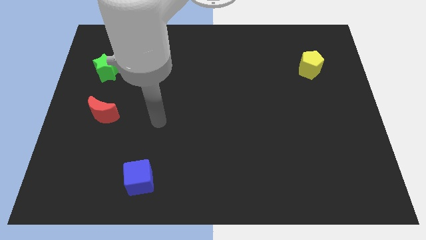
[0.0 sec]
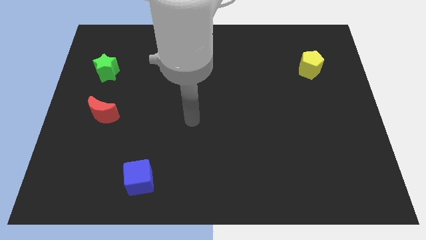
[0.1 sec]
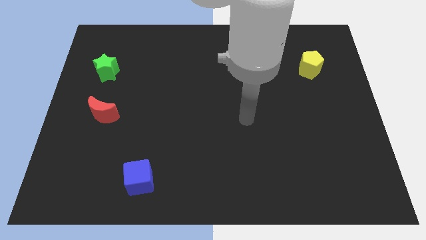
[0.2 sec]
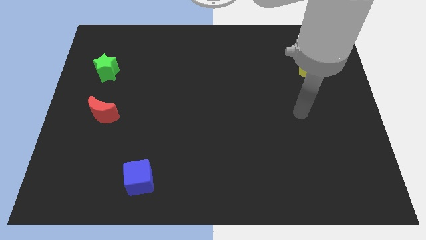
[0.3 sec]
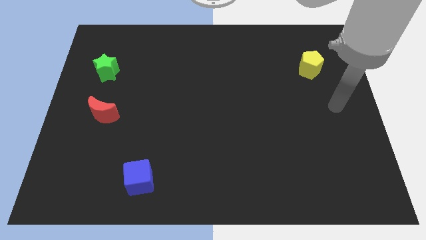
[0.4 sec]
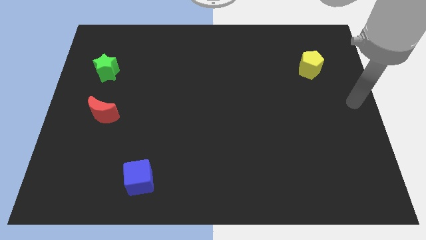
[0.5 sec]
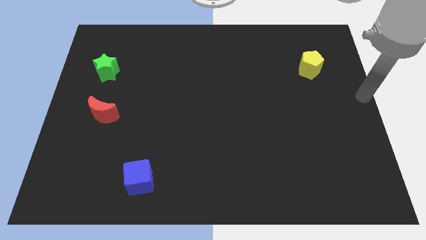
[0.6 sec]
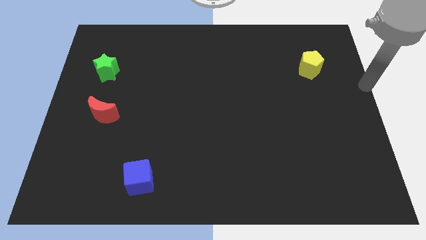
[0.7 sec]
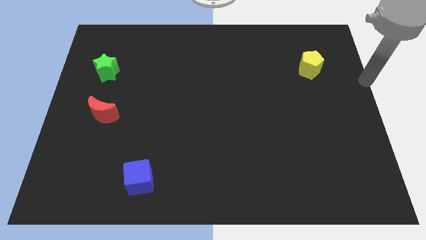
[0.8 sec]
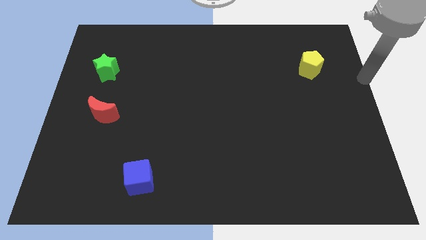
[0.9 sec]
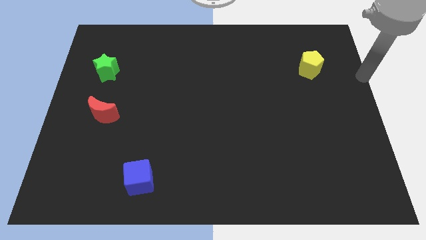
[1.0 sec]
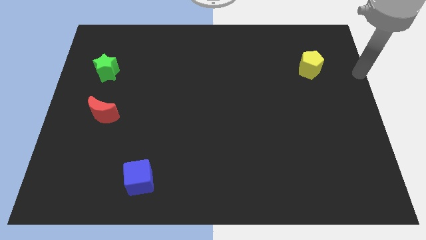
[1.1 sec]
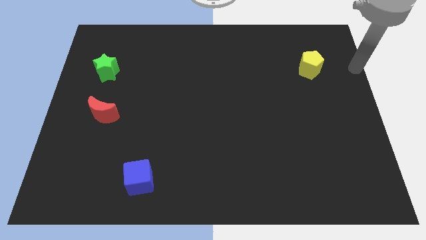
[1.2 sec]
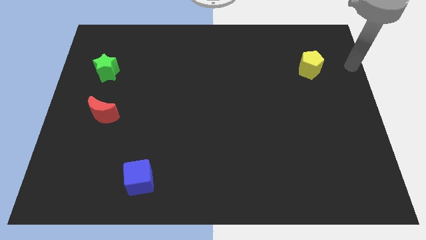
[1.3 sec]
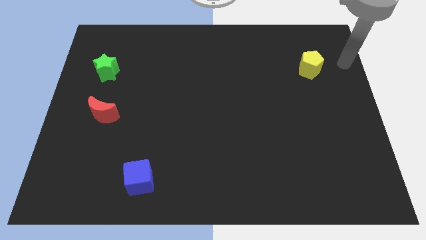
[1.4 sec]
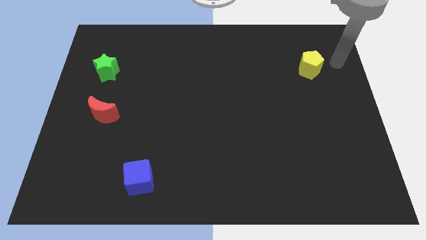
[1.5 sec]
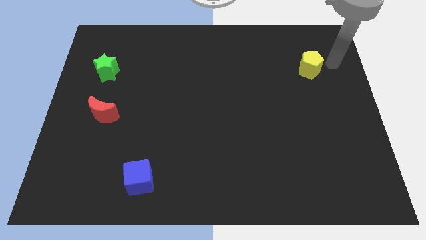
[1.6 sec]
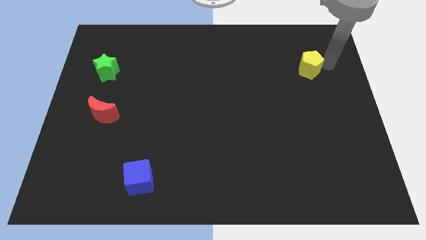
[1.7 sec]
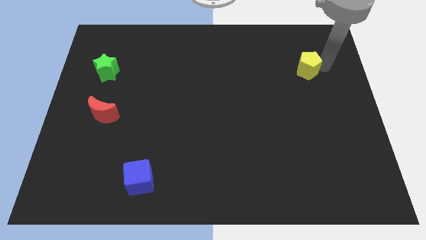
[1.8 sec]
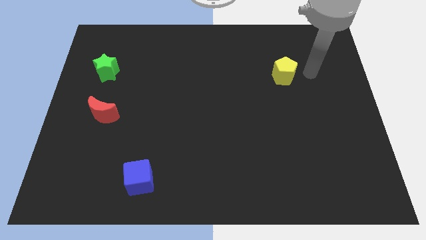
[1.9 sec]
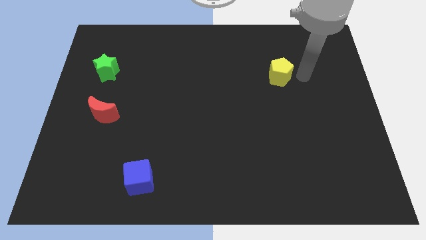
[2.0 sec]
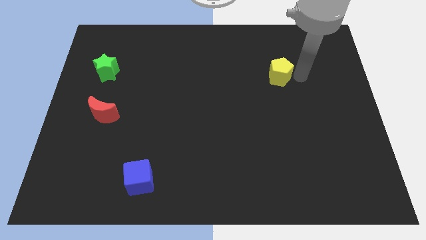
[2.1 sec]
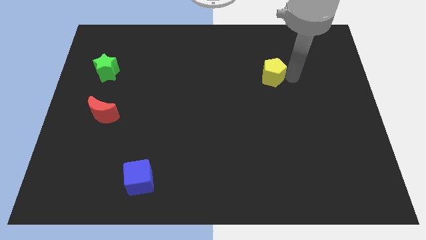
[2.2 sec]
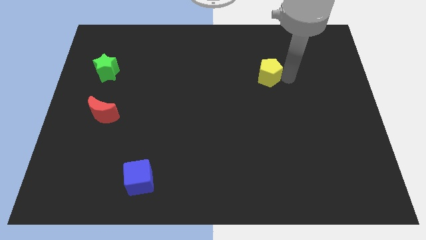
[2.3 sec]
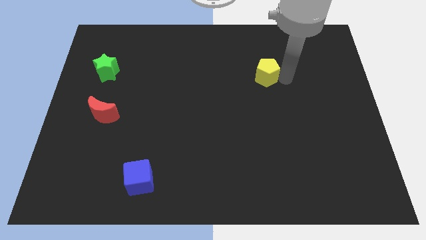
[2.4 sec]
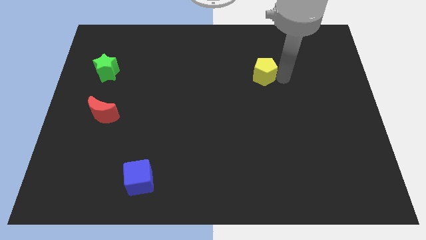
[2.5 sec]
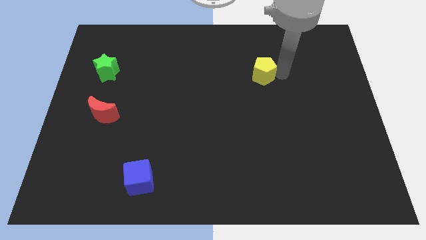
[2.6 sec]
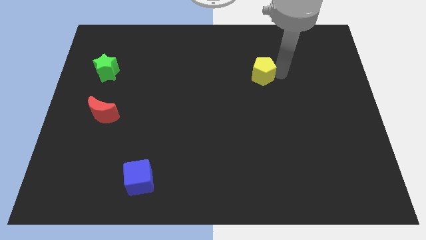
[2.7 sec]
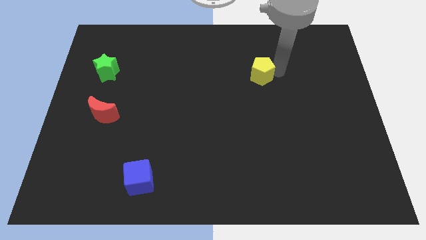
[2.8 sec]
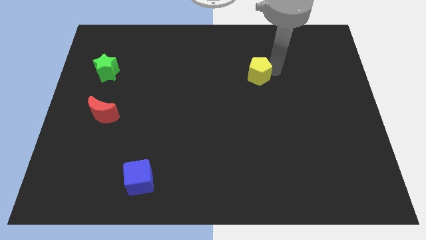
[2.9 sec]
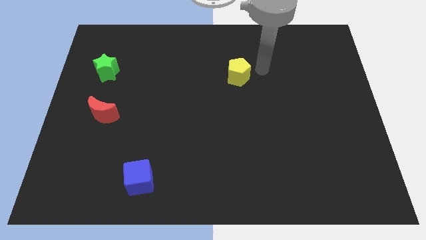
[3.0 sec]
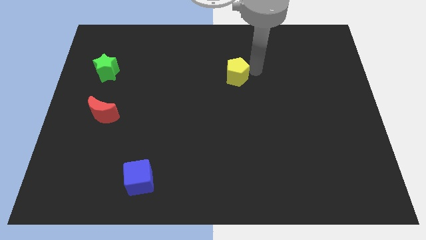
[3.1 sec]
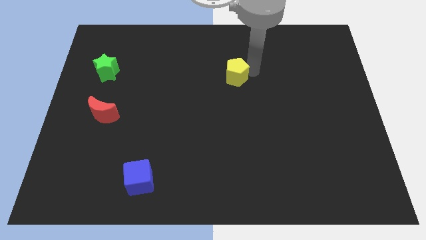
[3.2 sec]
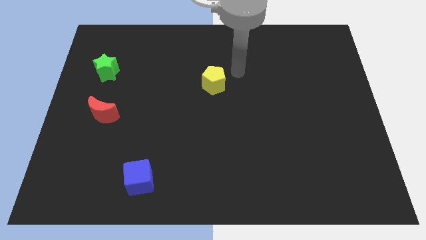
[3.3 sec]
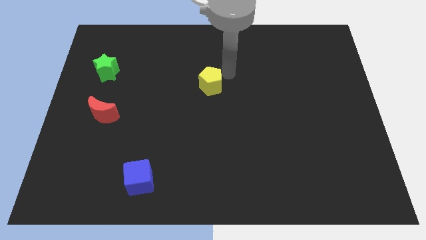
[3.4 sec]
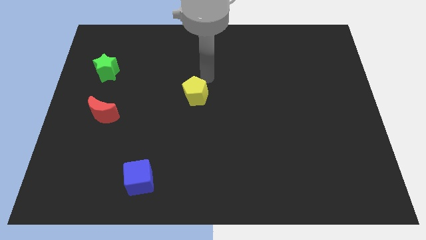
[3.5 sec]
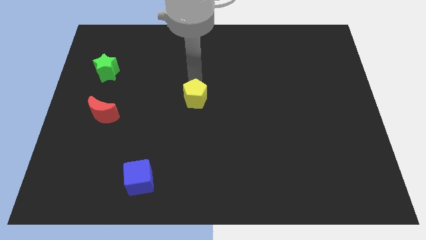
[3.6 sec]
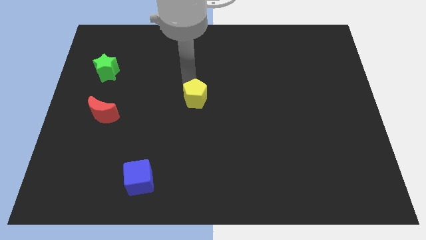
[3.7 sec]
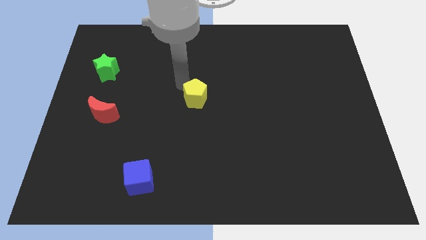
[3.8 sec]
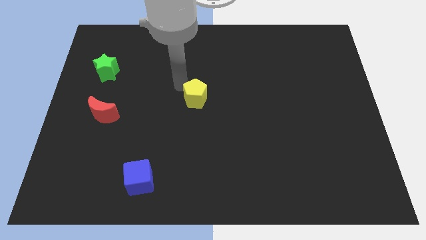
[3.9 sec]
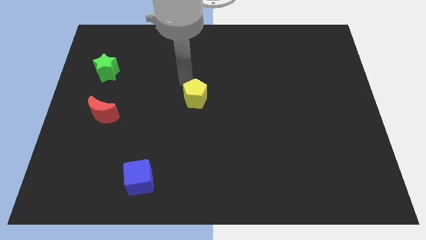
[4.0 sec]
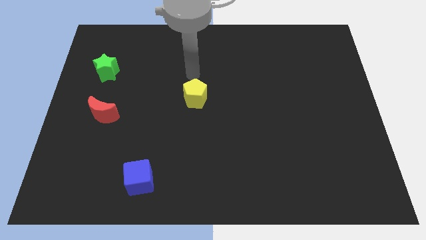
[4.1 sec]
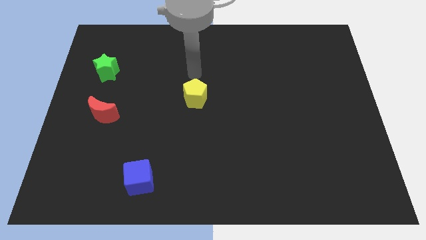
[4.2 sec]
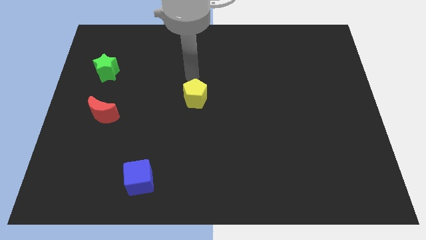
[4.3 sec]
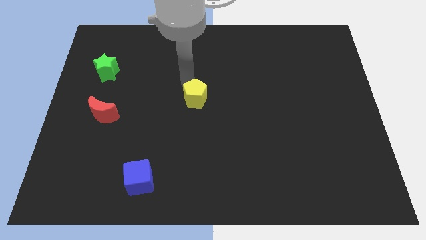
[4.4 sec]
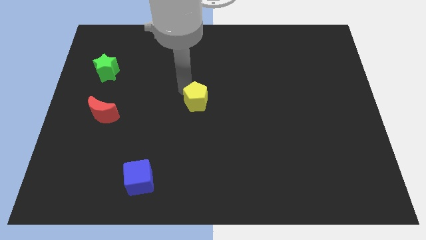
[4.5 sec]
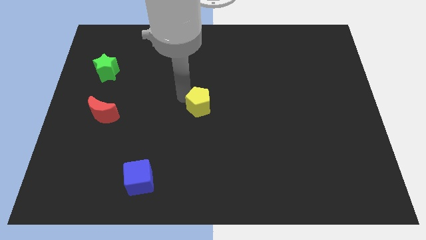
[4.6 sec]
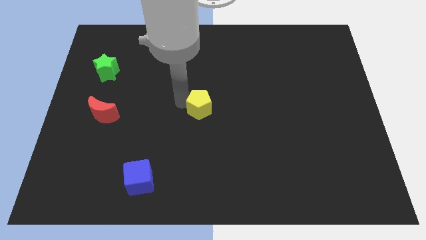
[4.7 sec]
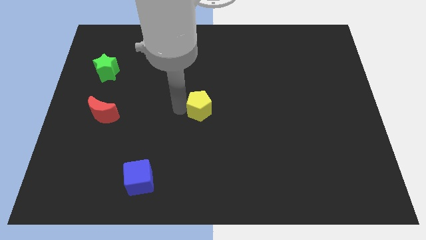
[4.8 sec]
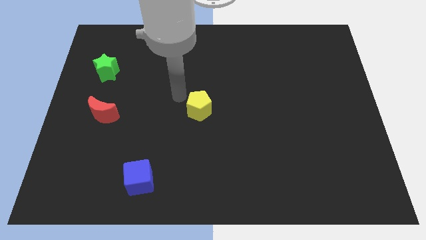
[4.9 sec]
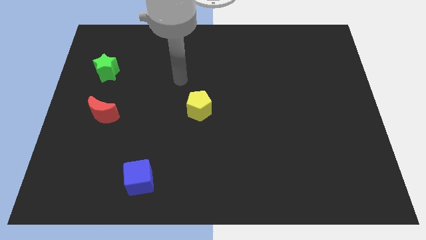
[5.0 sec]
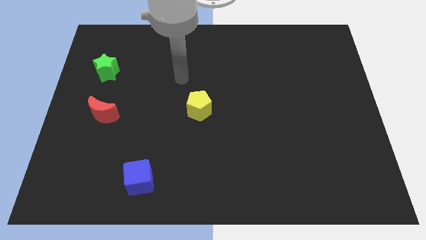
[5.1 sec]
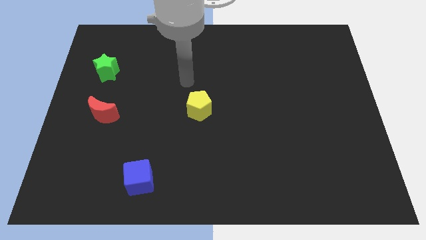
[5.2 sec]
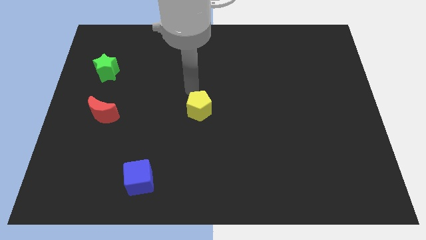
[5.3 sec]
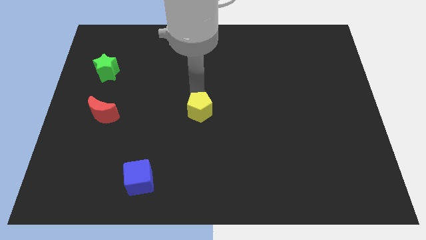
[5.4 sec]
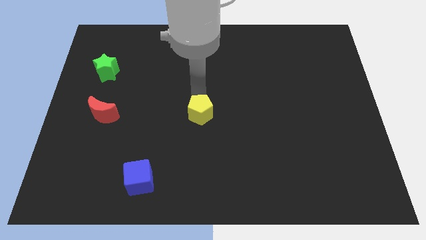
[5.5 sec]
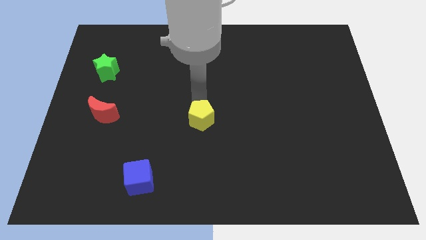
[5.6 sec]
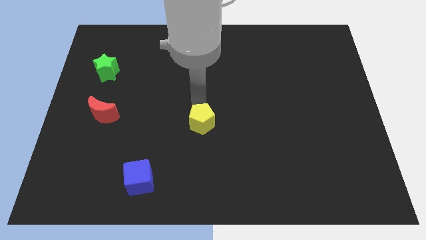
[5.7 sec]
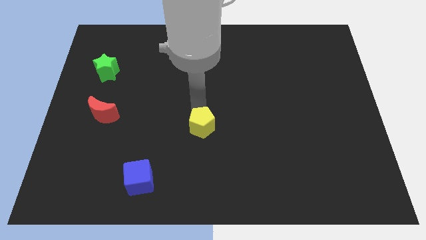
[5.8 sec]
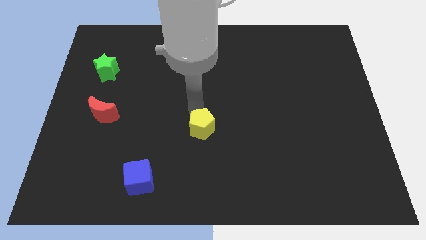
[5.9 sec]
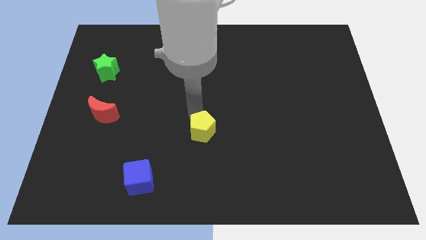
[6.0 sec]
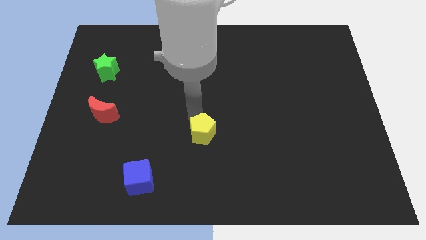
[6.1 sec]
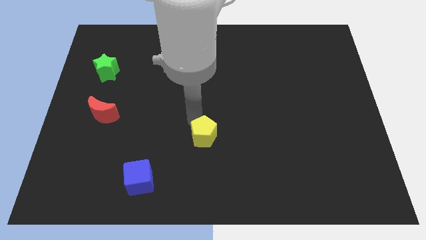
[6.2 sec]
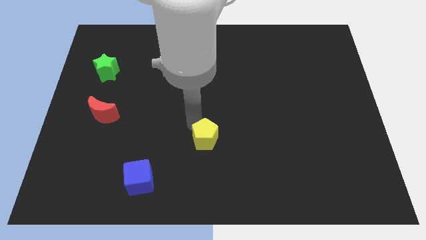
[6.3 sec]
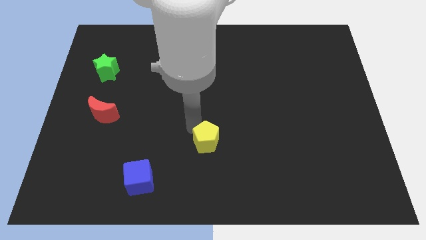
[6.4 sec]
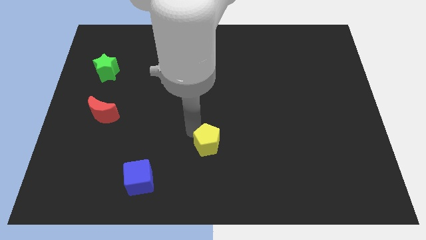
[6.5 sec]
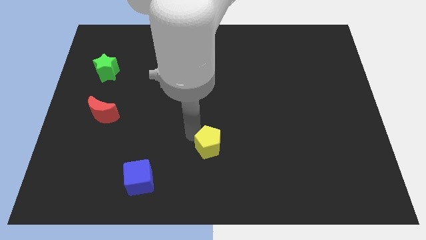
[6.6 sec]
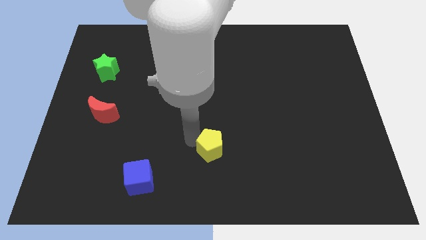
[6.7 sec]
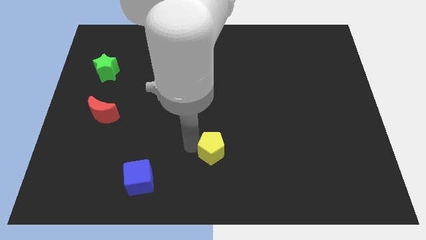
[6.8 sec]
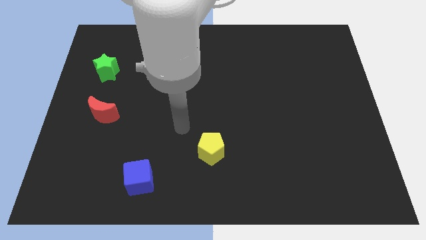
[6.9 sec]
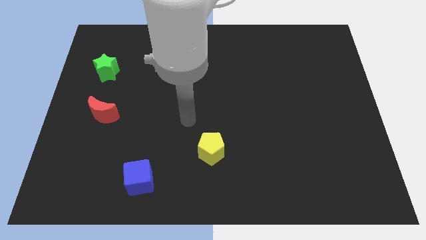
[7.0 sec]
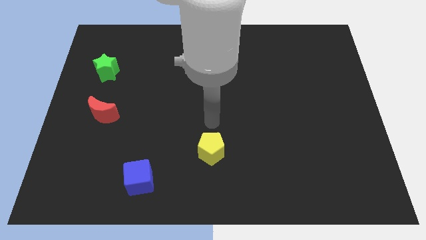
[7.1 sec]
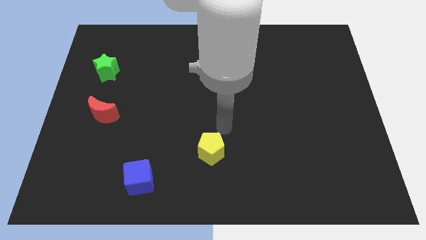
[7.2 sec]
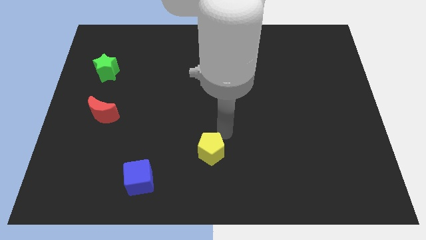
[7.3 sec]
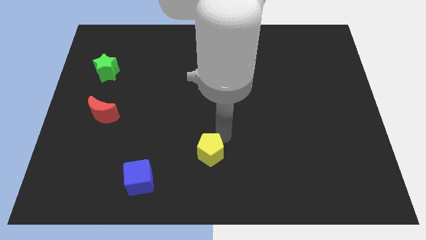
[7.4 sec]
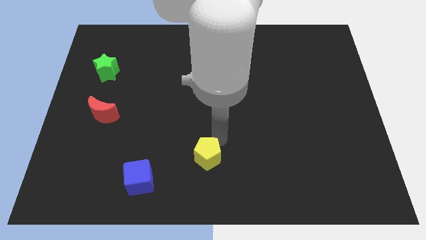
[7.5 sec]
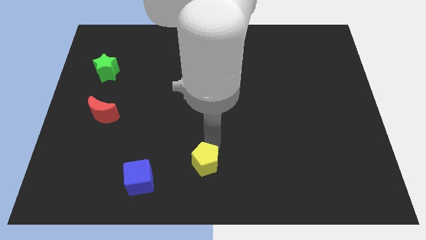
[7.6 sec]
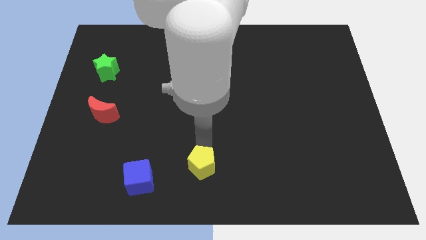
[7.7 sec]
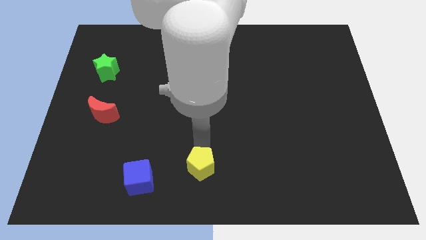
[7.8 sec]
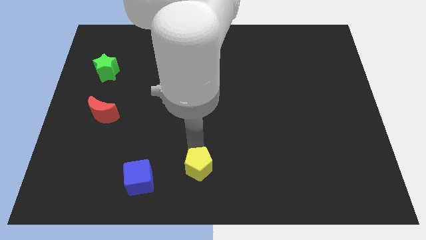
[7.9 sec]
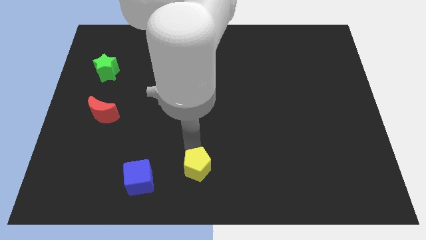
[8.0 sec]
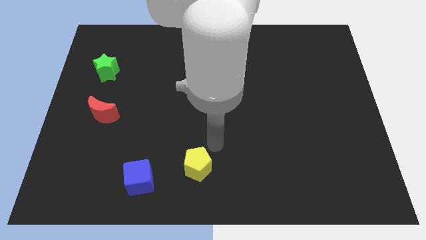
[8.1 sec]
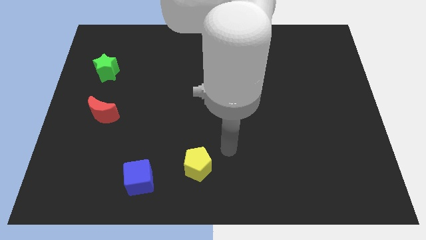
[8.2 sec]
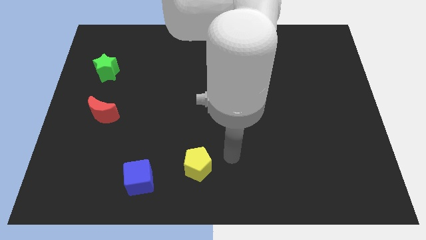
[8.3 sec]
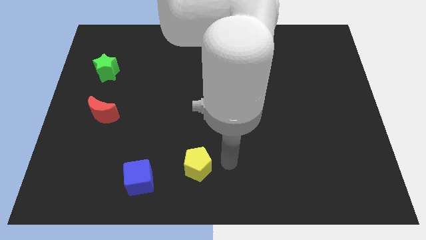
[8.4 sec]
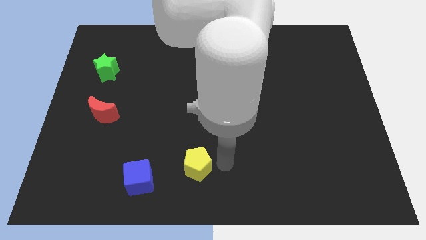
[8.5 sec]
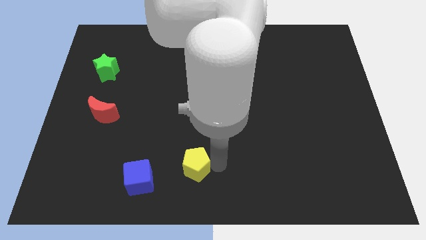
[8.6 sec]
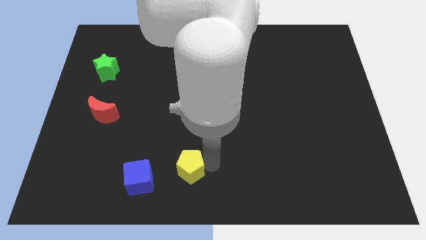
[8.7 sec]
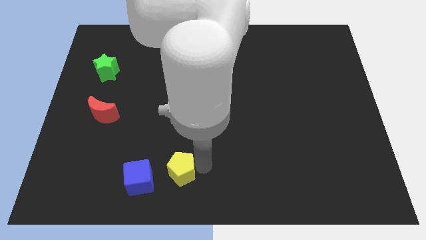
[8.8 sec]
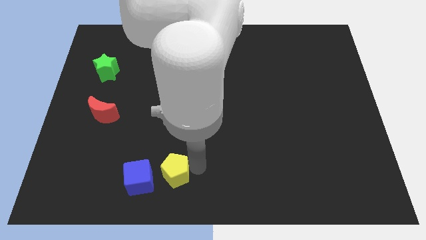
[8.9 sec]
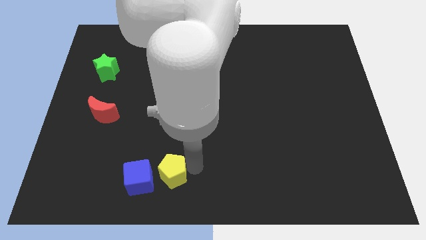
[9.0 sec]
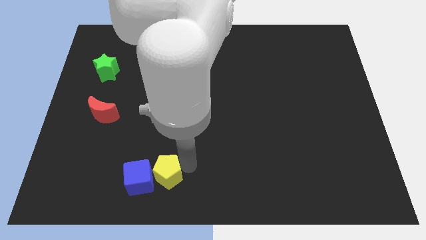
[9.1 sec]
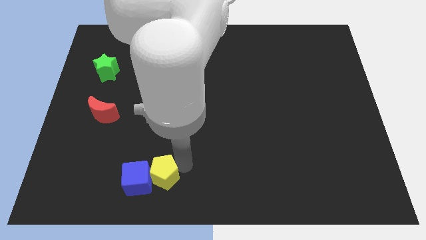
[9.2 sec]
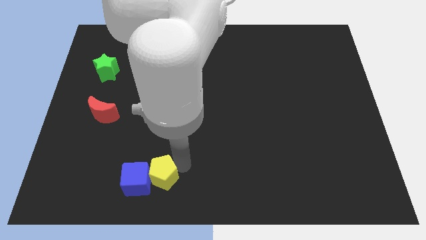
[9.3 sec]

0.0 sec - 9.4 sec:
push the yellow block to the cube
